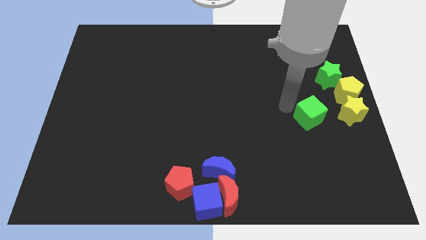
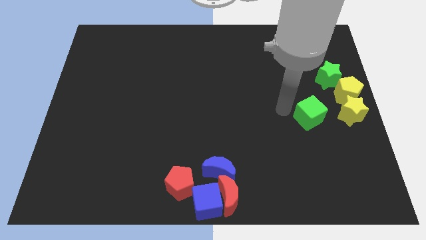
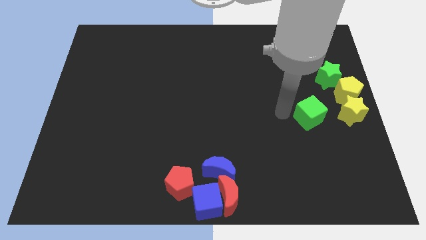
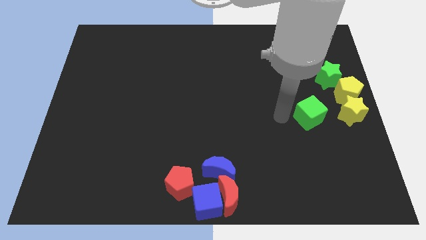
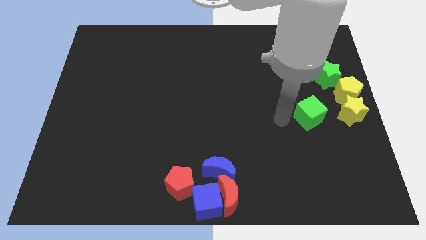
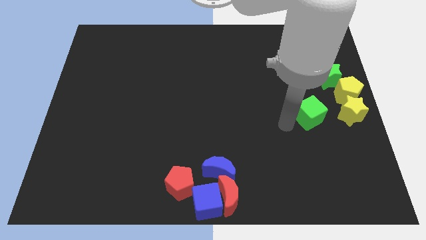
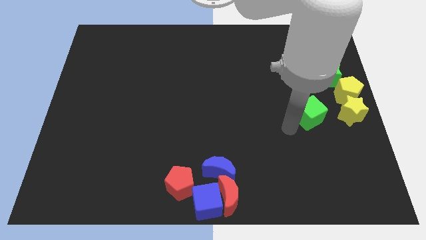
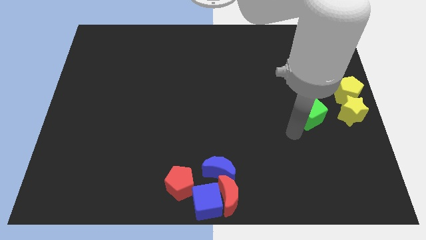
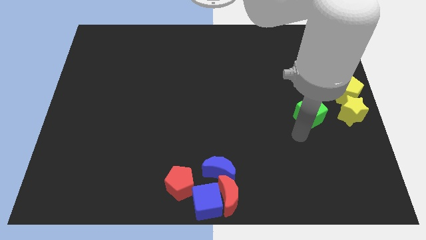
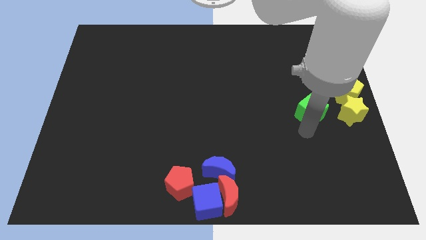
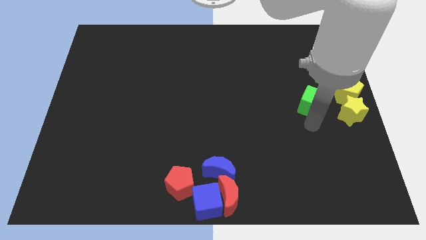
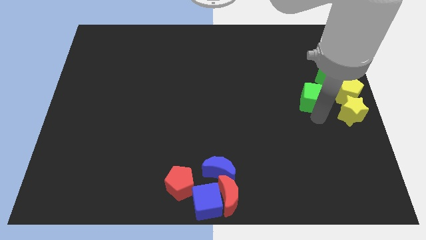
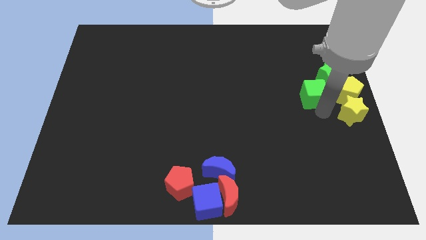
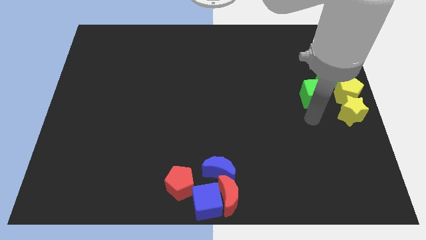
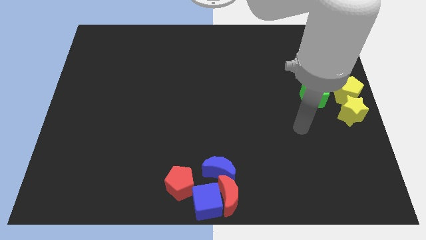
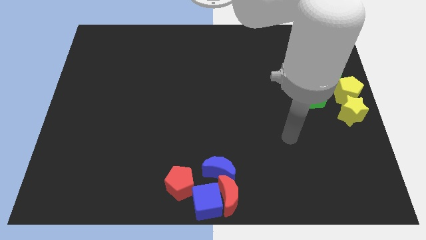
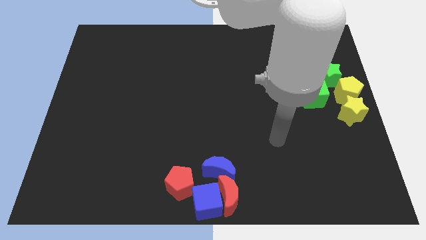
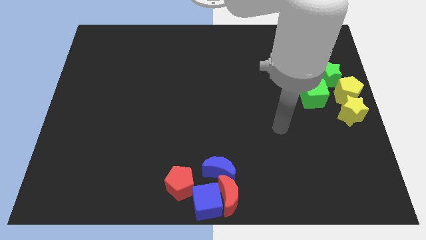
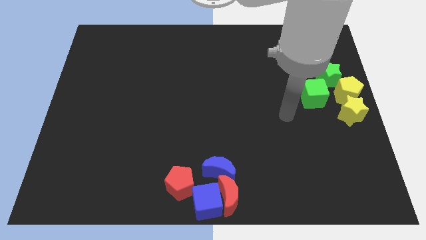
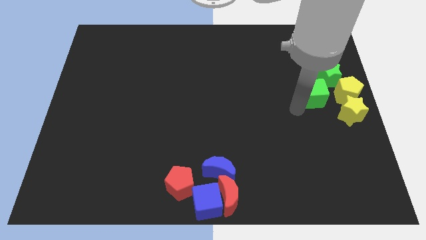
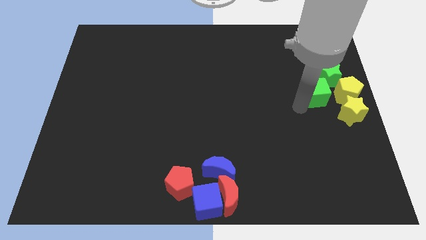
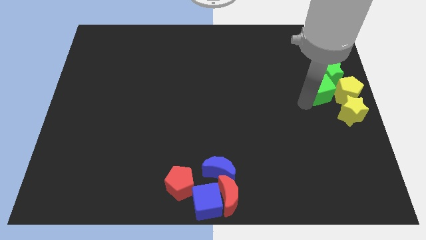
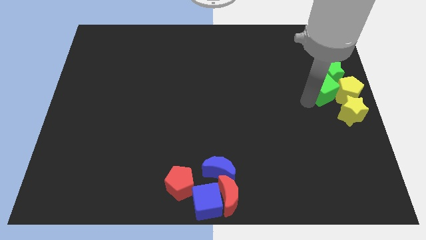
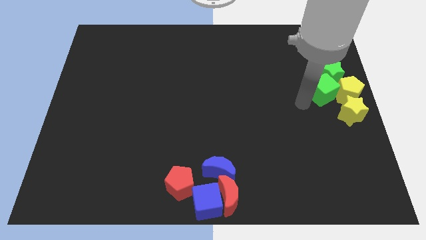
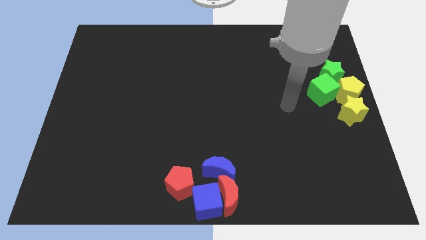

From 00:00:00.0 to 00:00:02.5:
push the green cube to the bottom of the green star

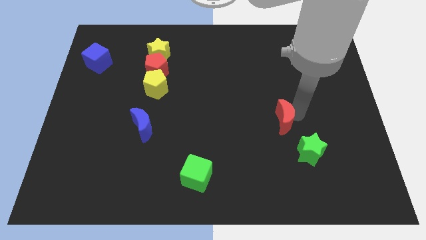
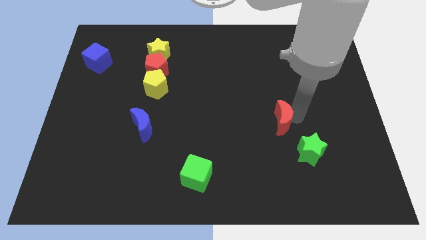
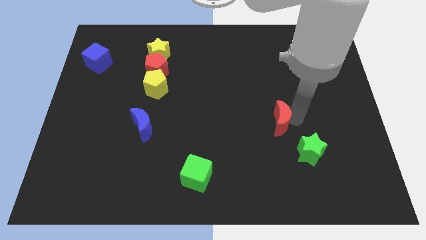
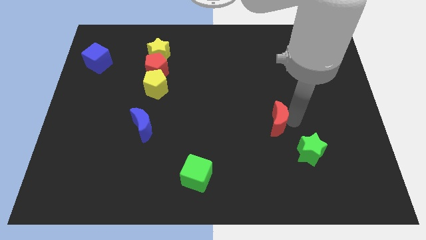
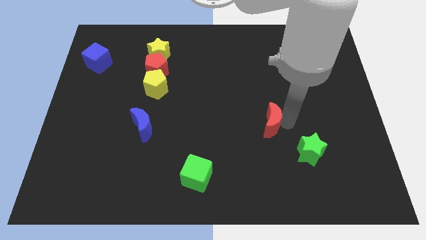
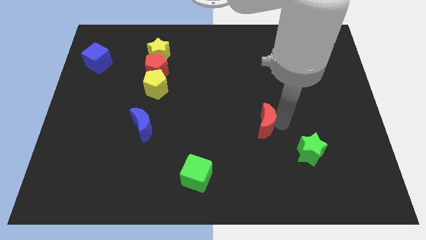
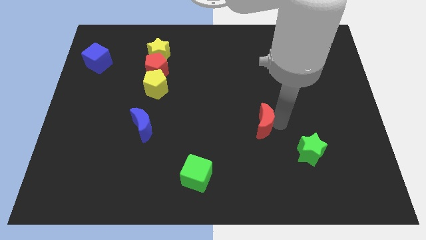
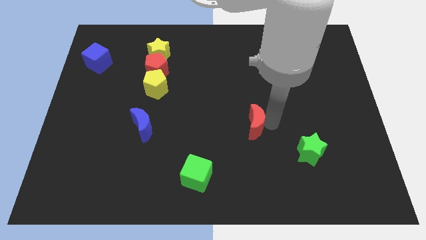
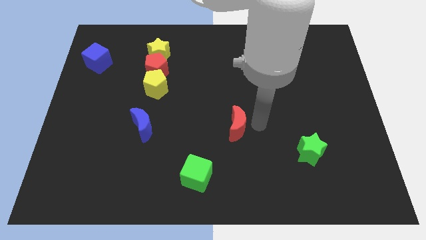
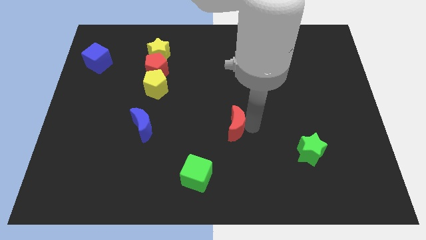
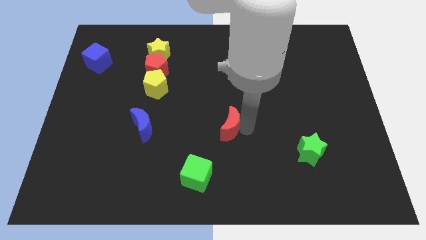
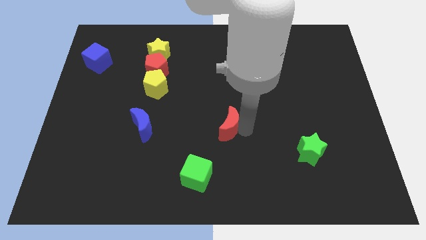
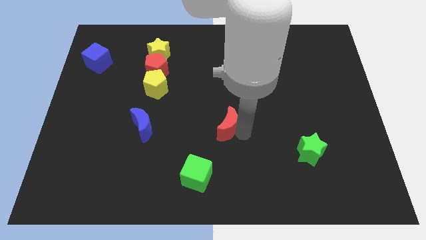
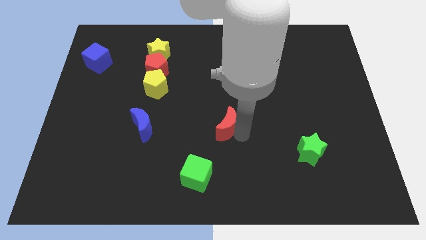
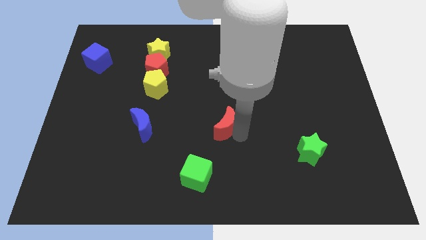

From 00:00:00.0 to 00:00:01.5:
push red crescent towards blue crescent

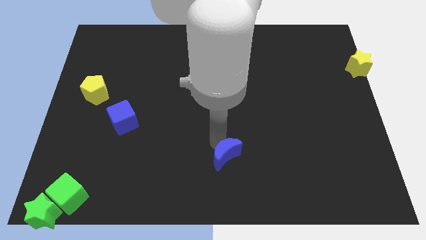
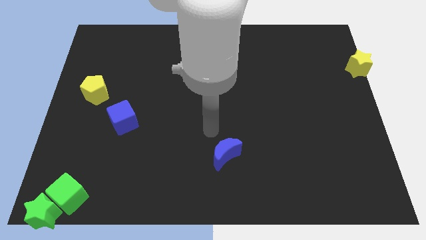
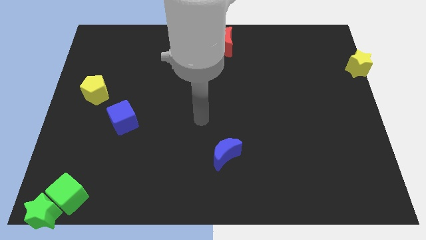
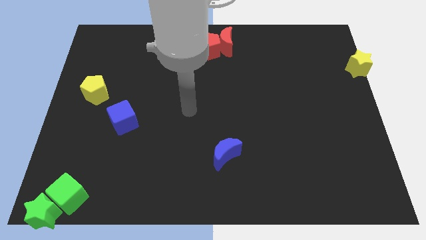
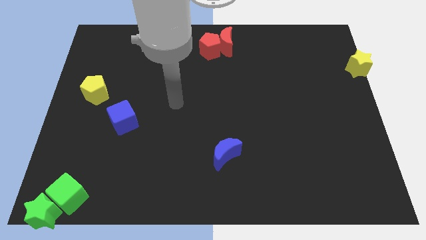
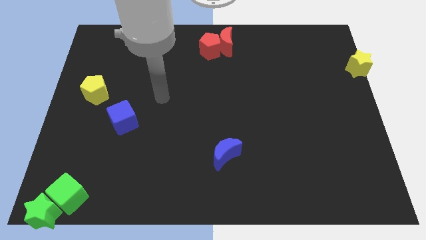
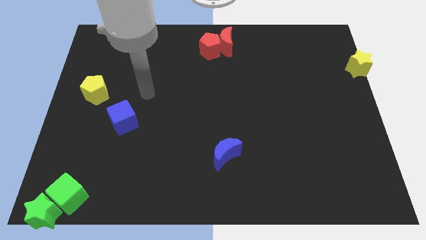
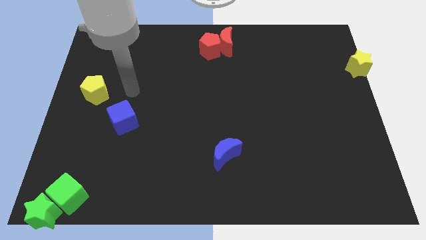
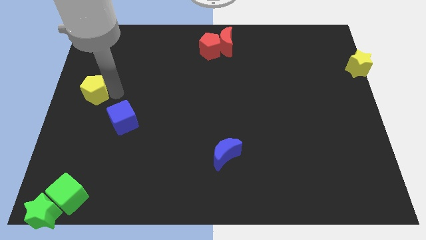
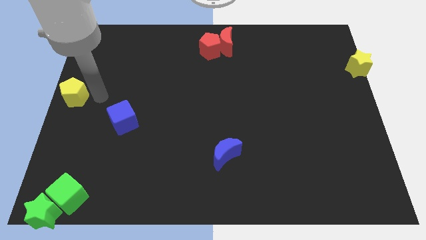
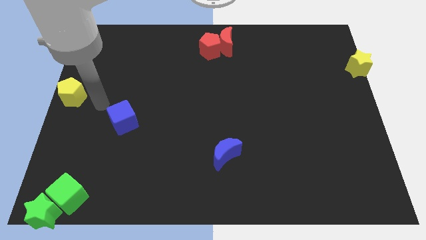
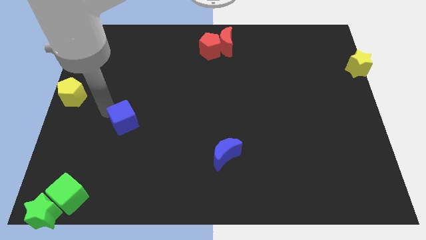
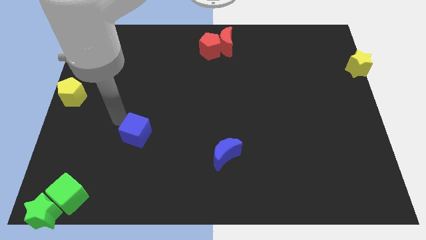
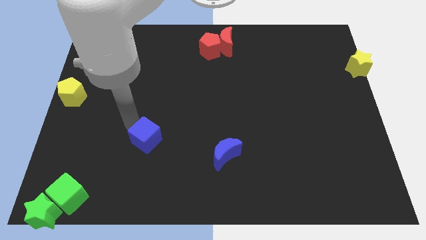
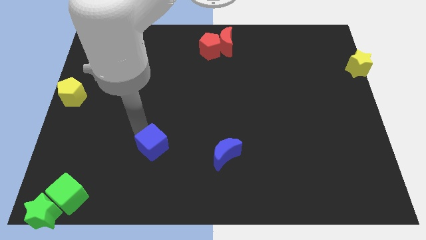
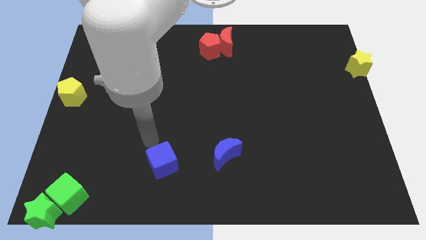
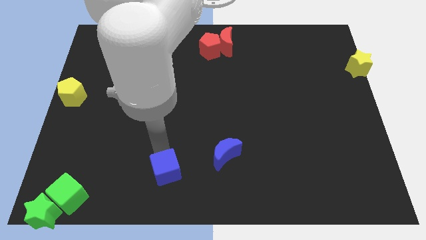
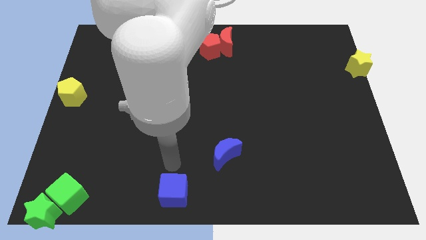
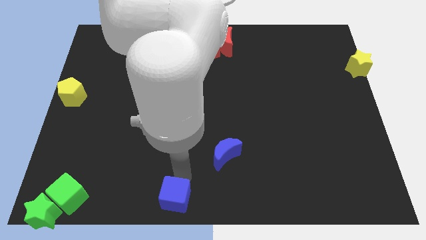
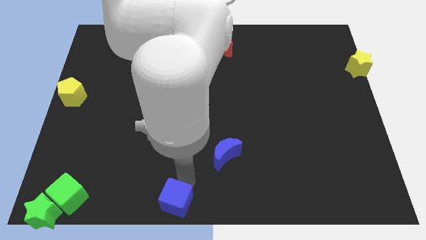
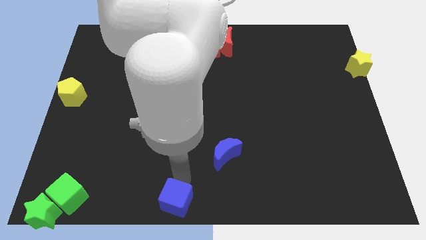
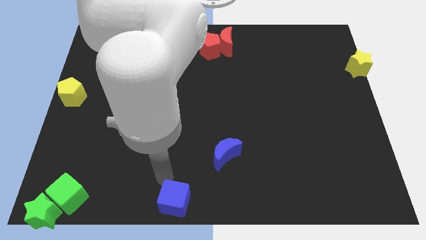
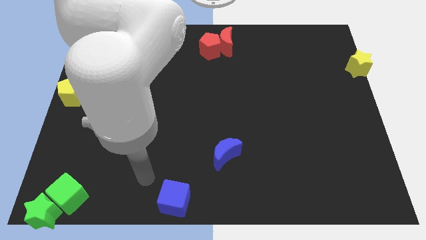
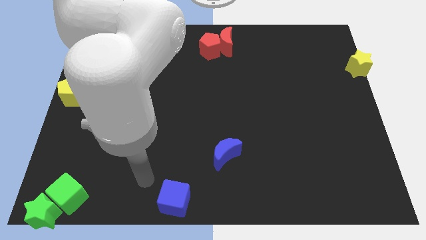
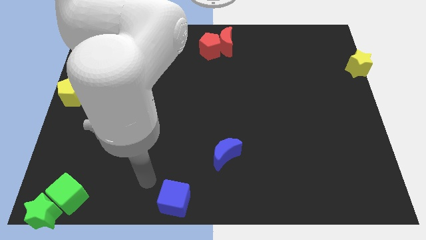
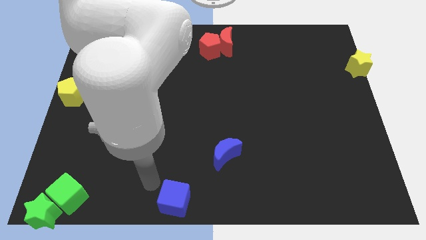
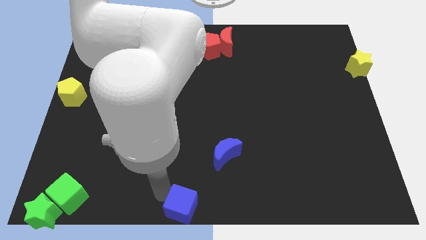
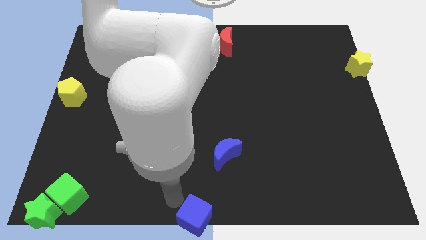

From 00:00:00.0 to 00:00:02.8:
move blue cube to the bottom center of the board

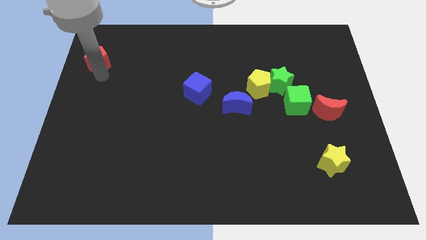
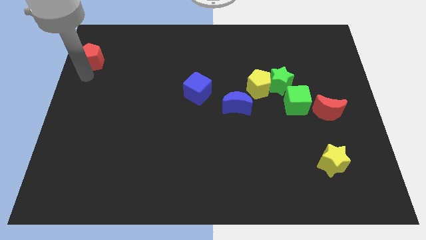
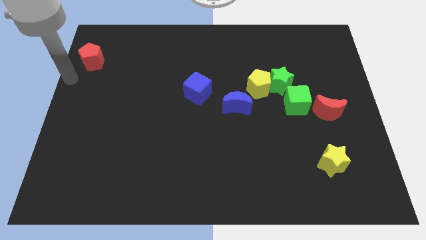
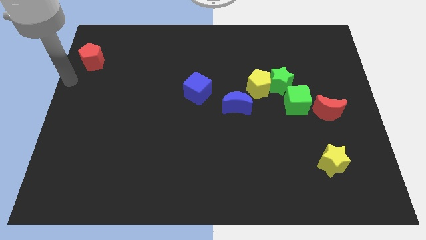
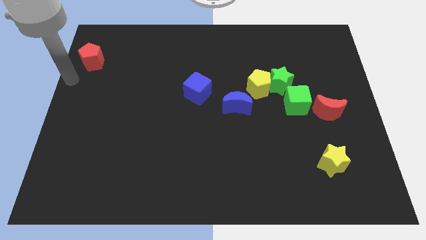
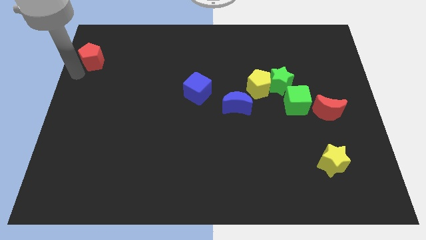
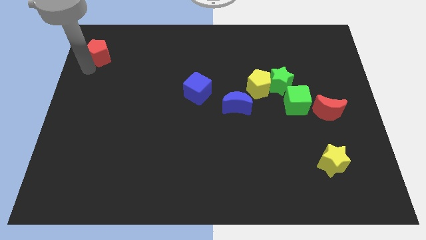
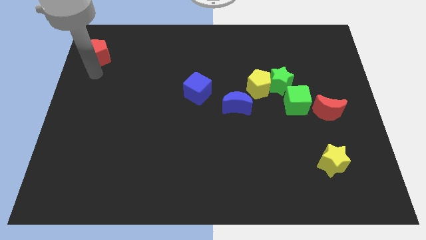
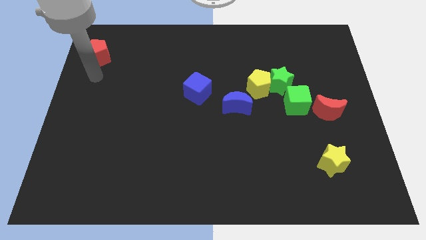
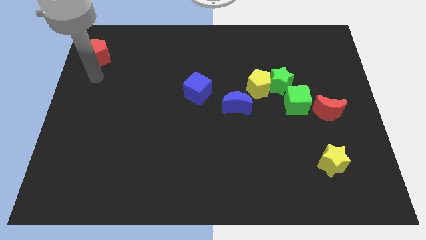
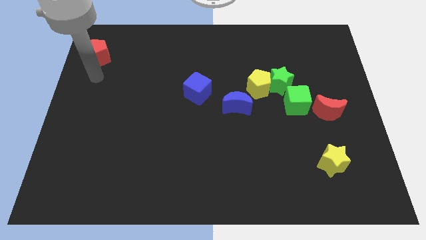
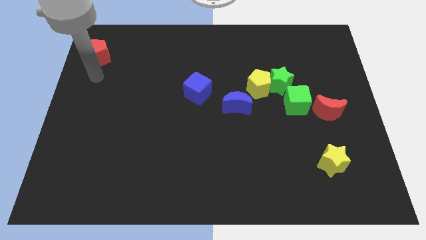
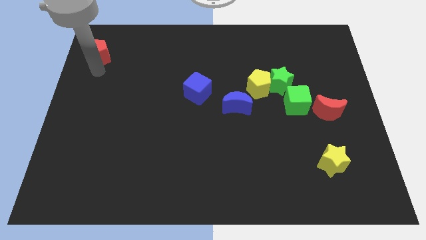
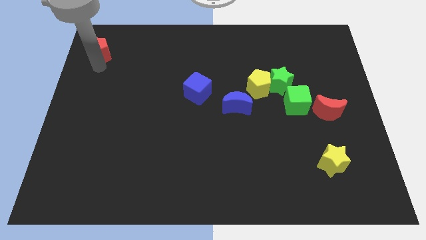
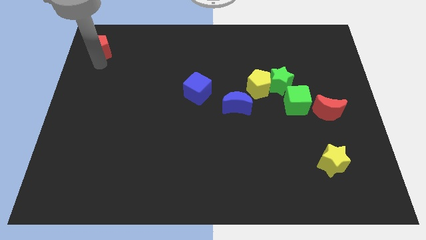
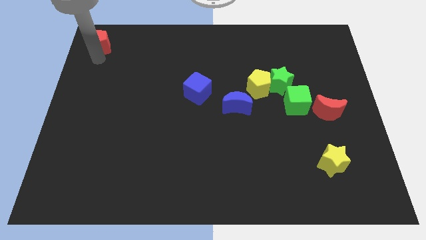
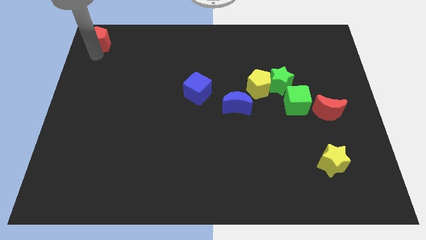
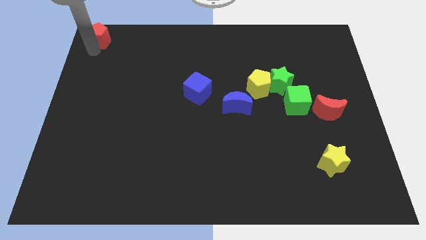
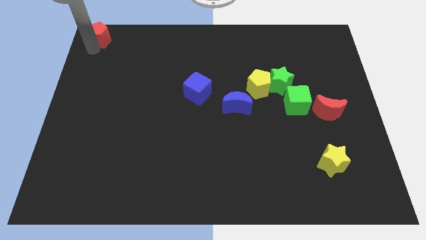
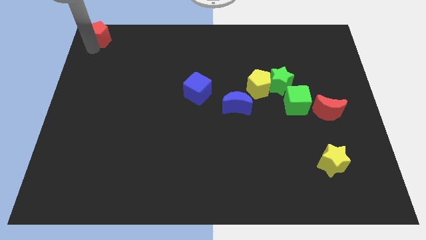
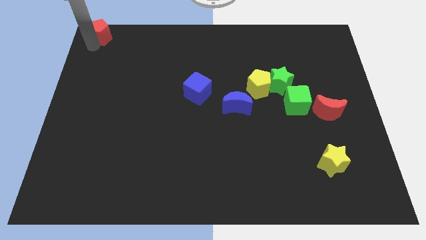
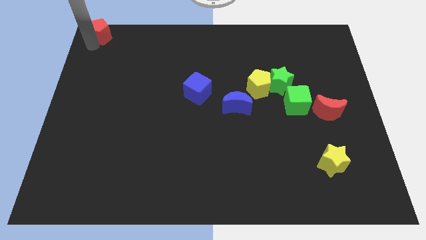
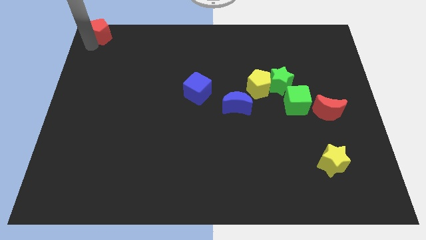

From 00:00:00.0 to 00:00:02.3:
move the red pentagon to the top left of the board
